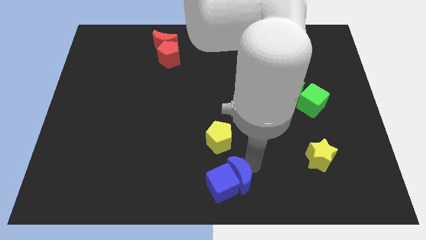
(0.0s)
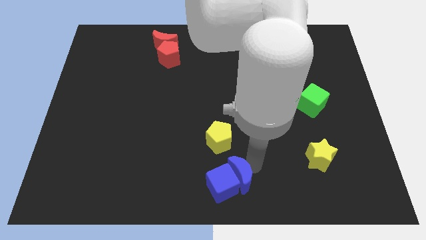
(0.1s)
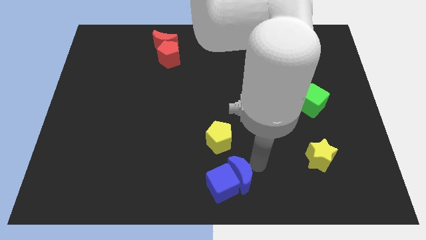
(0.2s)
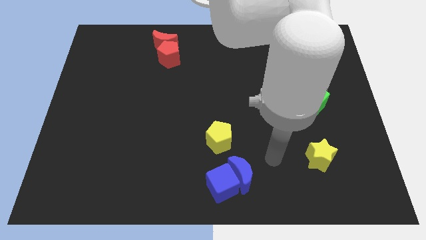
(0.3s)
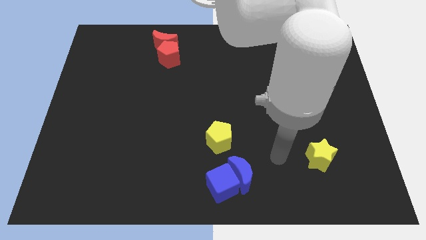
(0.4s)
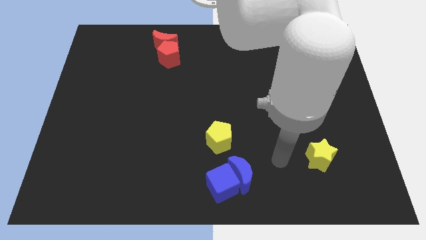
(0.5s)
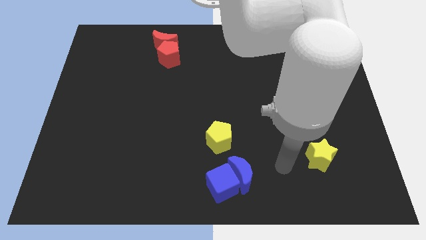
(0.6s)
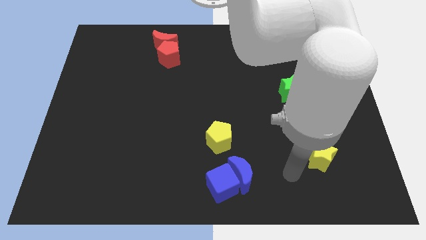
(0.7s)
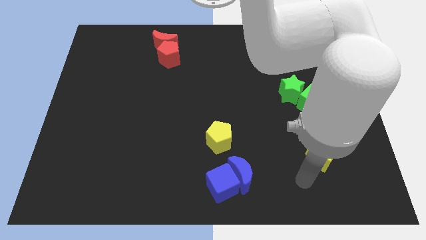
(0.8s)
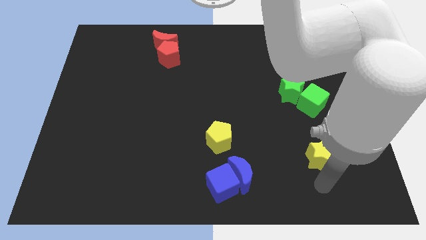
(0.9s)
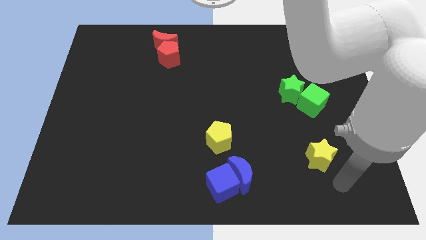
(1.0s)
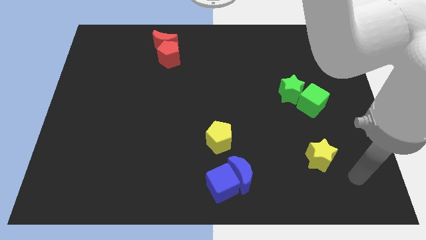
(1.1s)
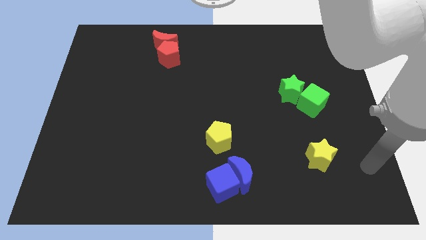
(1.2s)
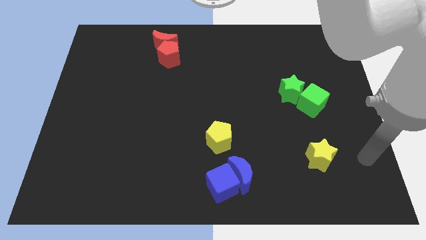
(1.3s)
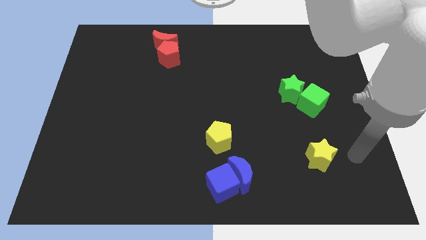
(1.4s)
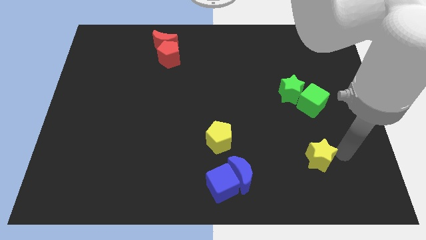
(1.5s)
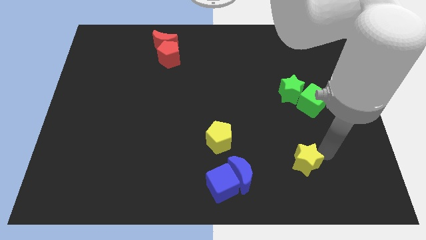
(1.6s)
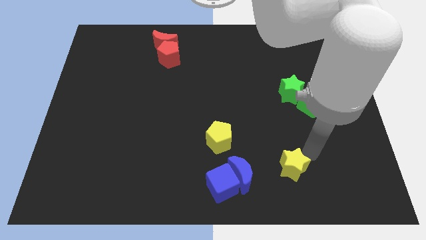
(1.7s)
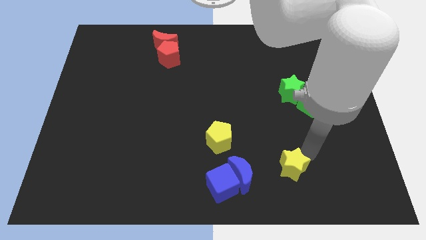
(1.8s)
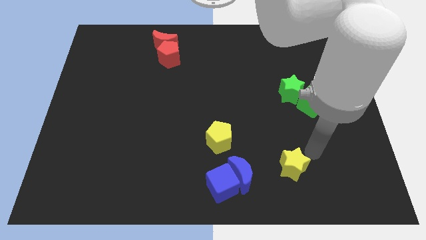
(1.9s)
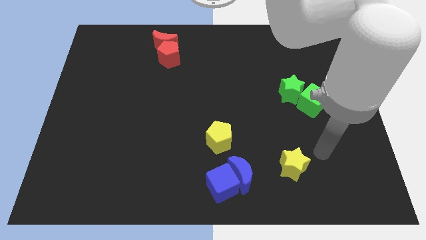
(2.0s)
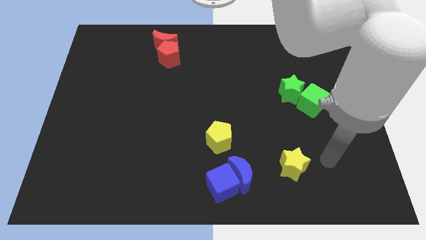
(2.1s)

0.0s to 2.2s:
slide the yellow star to the right of the blue moon

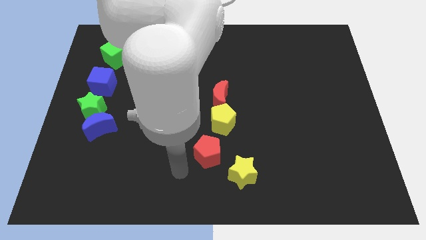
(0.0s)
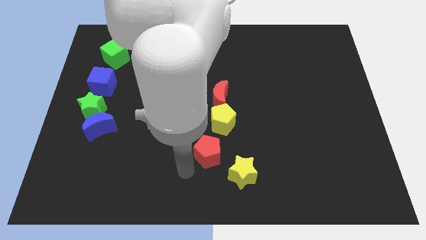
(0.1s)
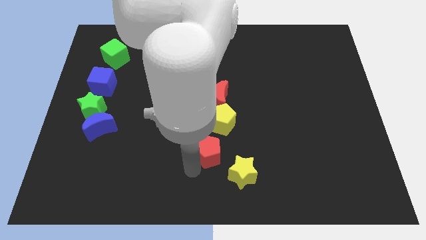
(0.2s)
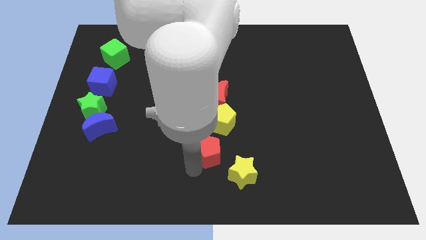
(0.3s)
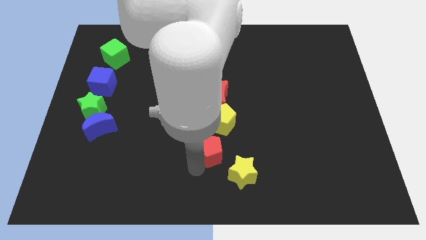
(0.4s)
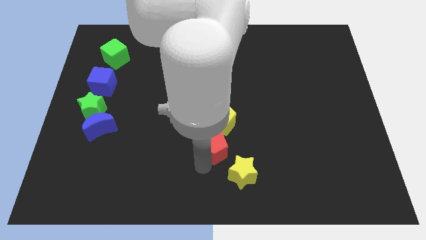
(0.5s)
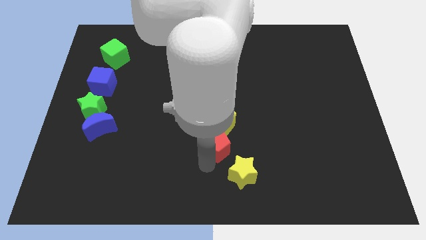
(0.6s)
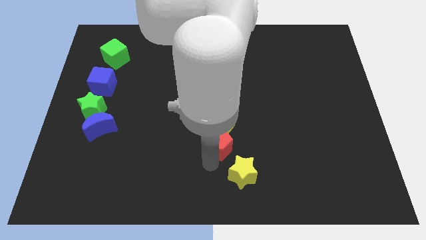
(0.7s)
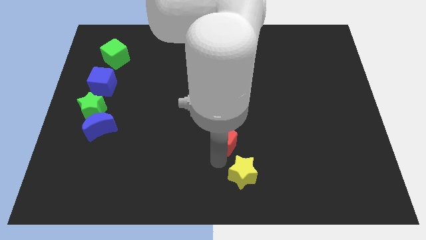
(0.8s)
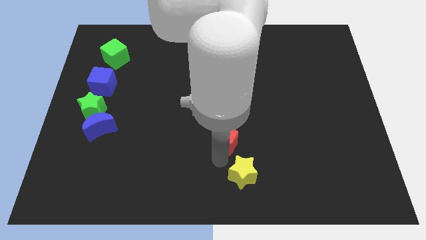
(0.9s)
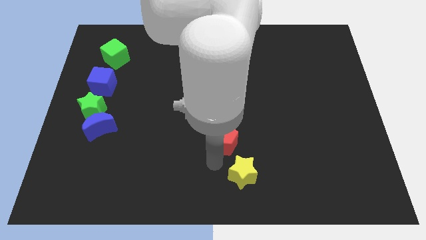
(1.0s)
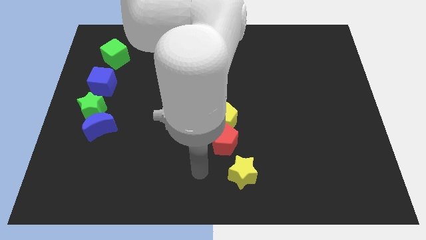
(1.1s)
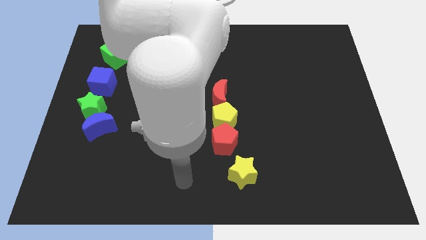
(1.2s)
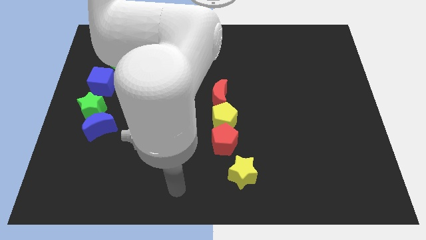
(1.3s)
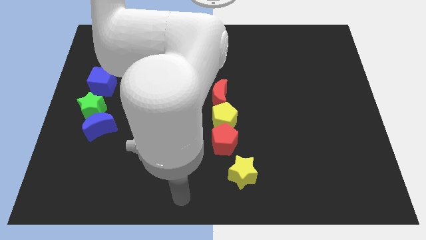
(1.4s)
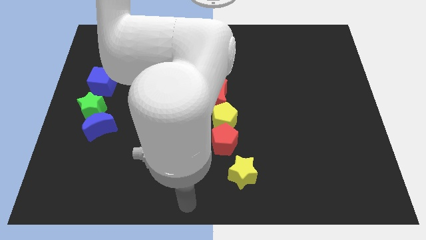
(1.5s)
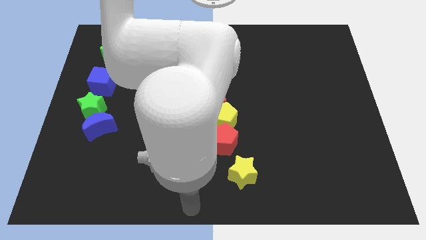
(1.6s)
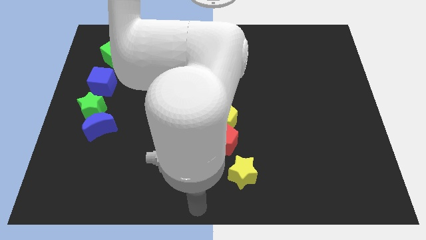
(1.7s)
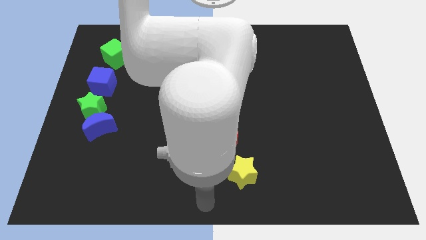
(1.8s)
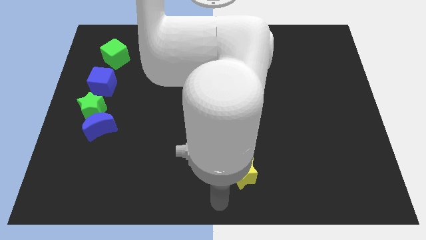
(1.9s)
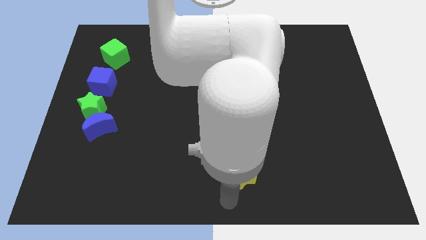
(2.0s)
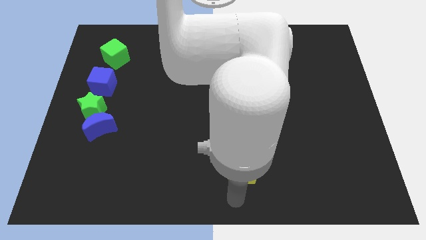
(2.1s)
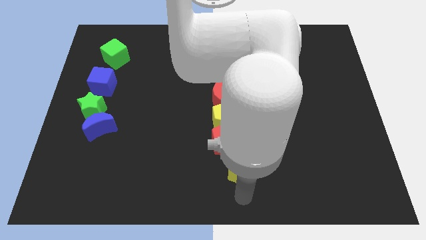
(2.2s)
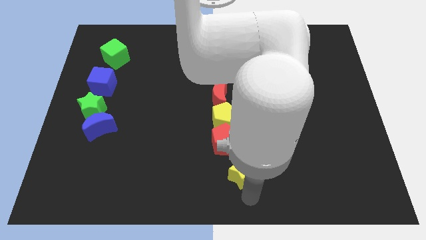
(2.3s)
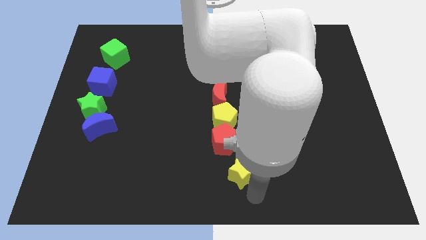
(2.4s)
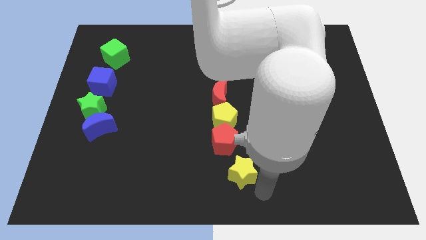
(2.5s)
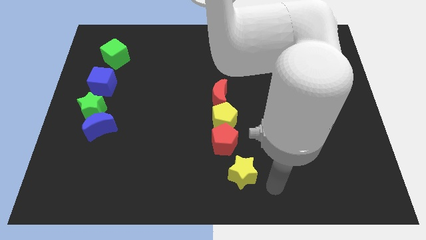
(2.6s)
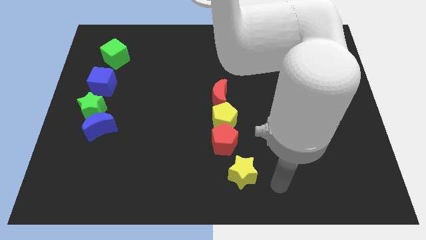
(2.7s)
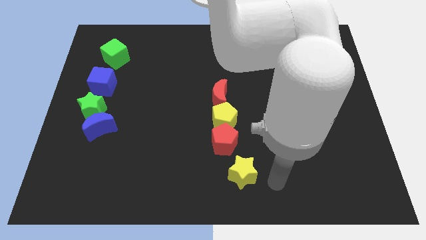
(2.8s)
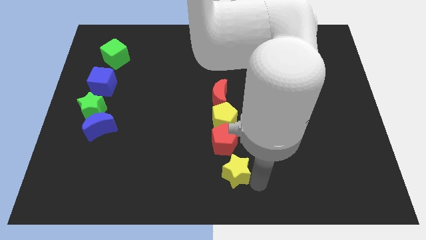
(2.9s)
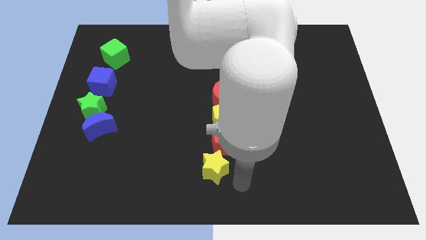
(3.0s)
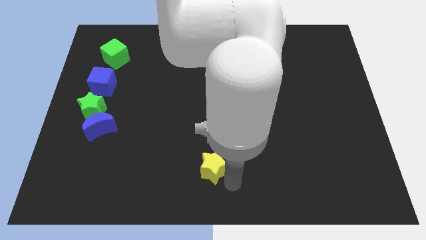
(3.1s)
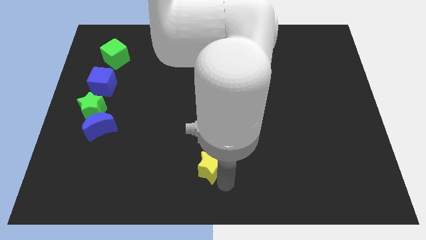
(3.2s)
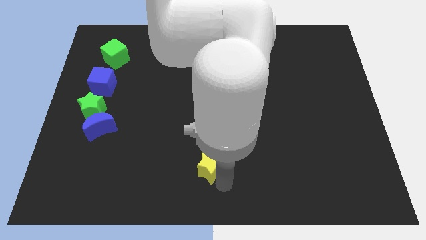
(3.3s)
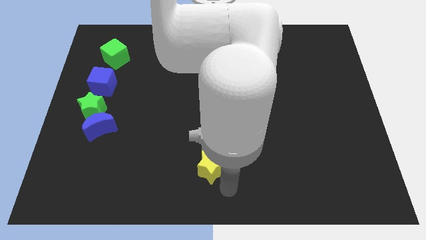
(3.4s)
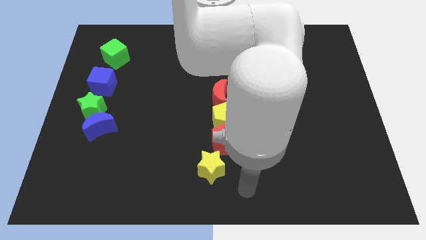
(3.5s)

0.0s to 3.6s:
place the yellow star diagonally bottom right to the blue moon

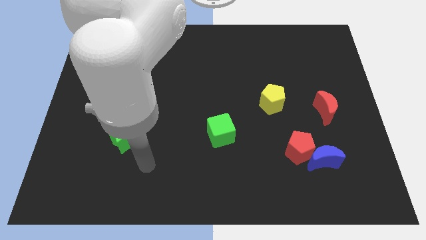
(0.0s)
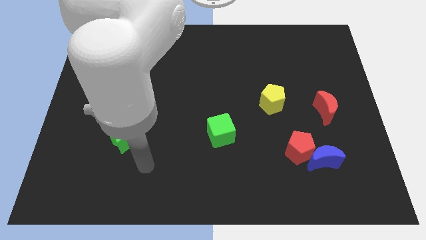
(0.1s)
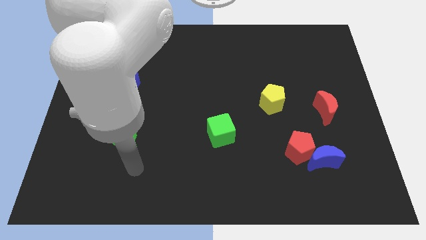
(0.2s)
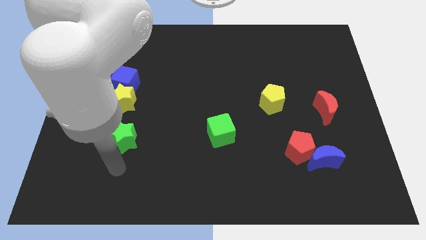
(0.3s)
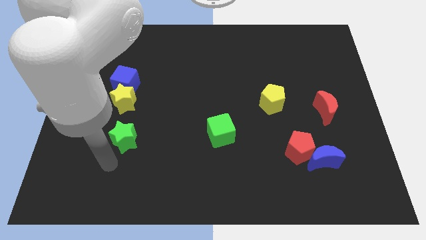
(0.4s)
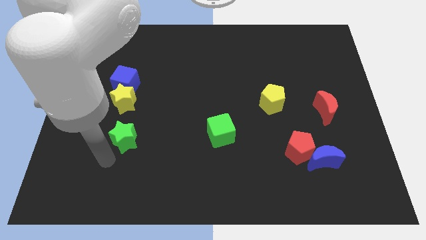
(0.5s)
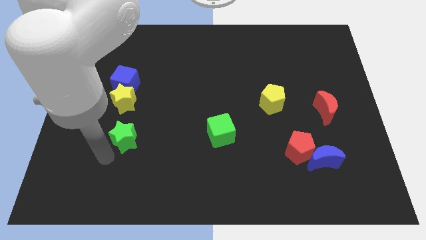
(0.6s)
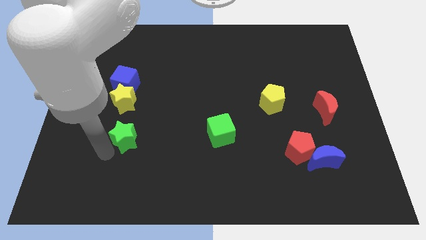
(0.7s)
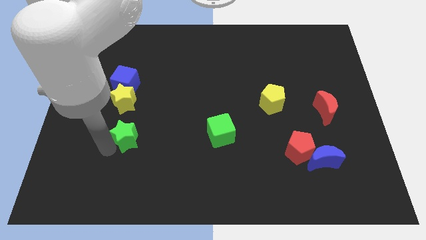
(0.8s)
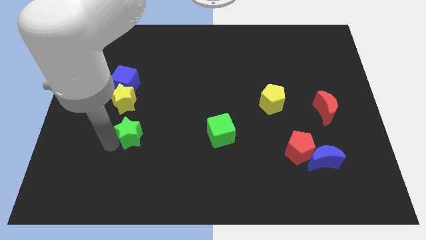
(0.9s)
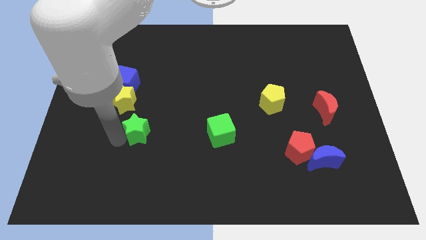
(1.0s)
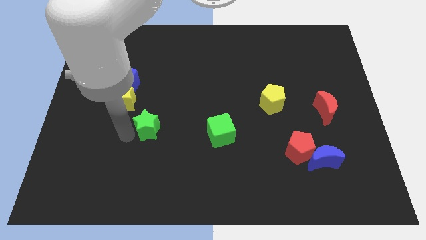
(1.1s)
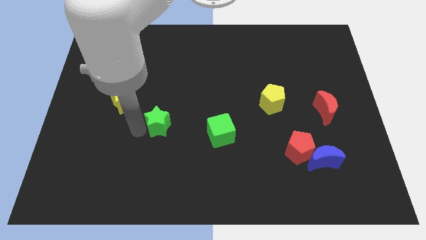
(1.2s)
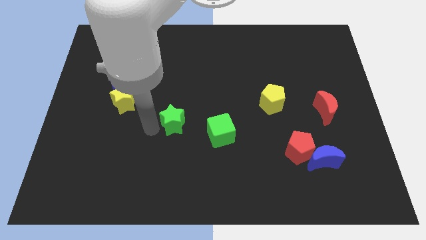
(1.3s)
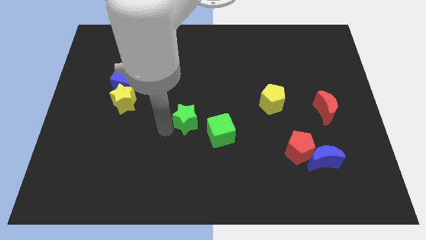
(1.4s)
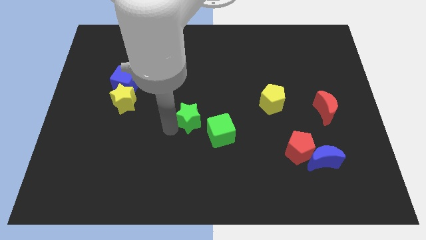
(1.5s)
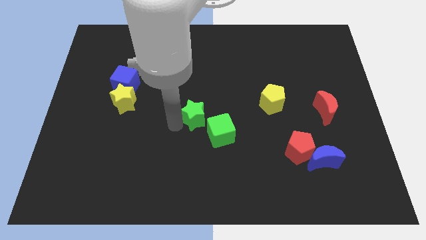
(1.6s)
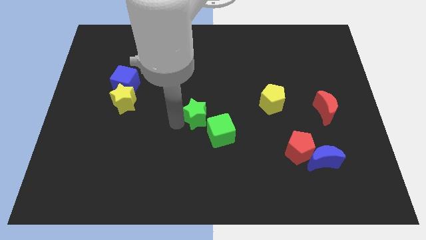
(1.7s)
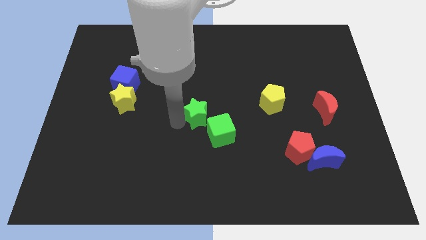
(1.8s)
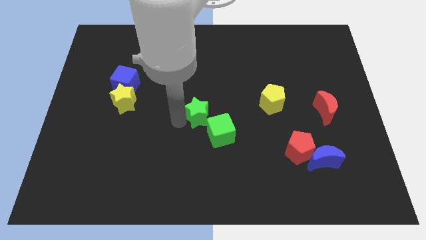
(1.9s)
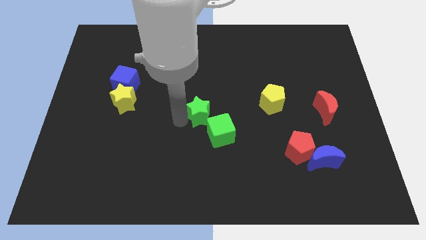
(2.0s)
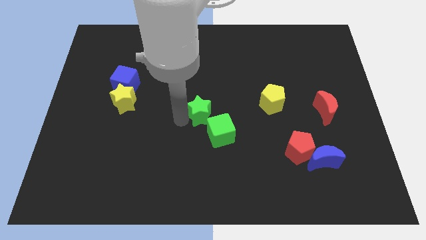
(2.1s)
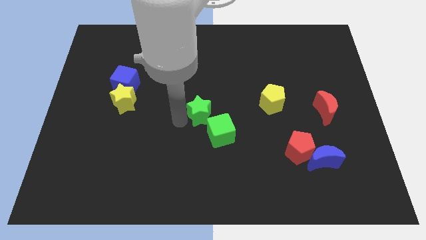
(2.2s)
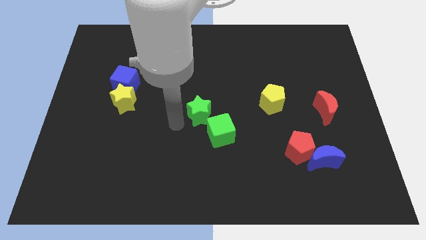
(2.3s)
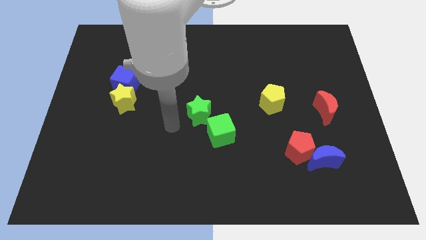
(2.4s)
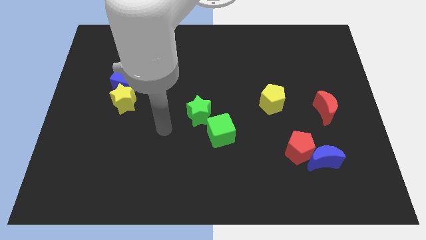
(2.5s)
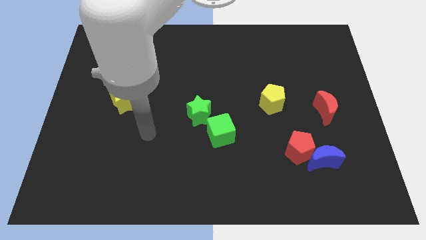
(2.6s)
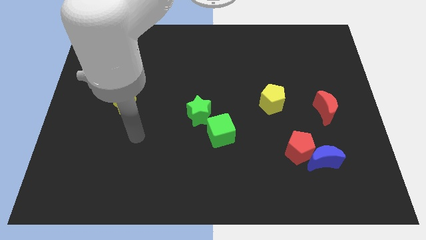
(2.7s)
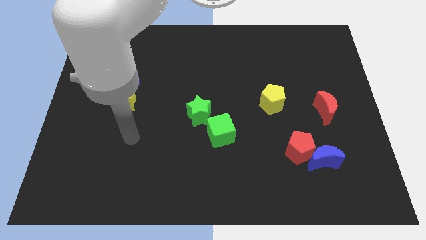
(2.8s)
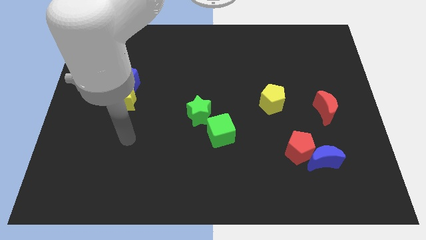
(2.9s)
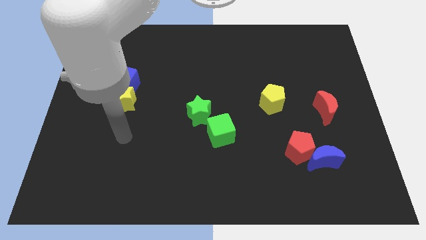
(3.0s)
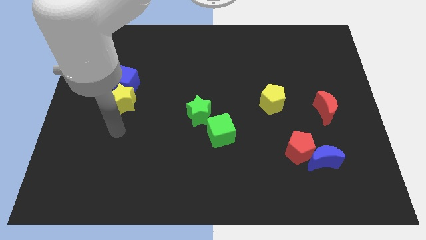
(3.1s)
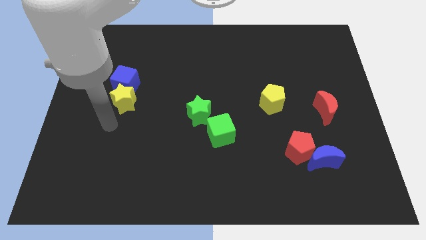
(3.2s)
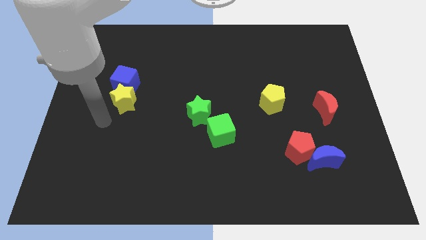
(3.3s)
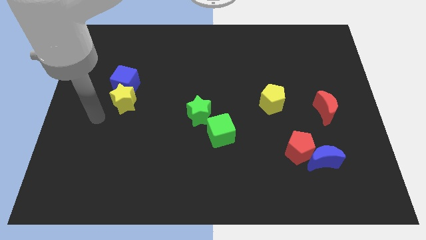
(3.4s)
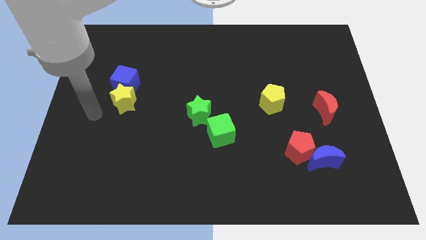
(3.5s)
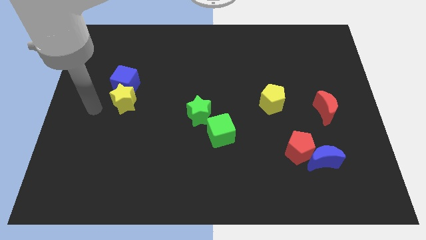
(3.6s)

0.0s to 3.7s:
put the green star at the top left side of the green cube
